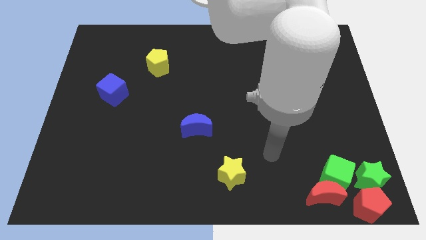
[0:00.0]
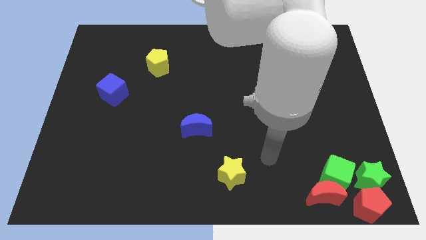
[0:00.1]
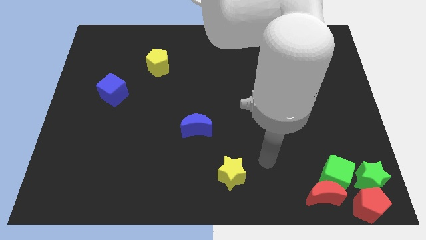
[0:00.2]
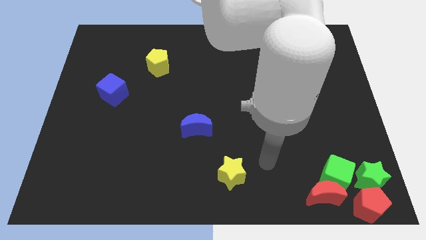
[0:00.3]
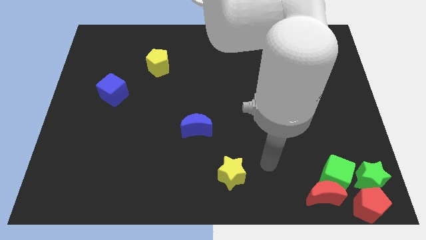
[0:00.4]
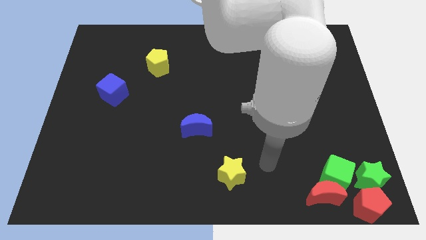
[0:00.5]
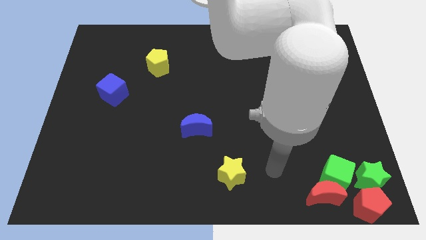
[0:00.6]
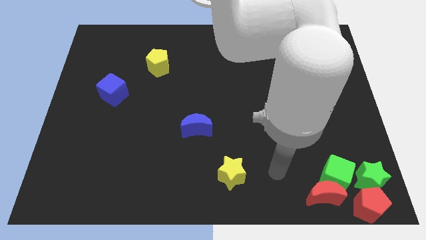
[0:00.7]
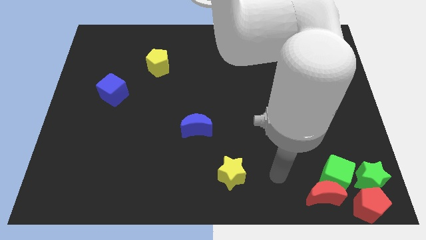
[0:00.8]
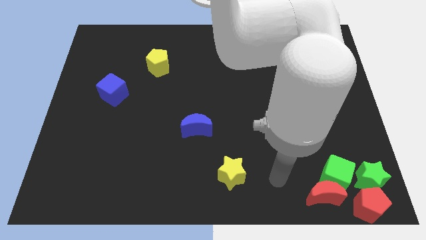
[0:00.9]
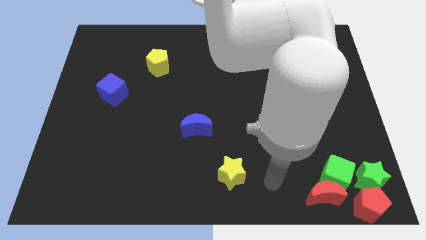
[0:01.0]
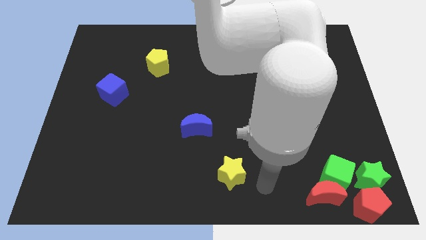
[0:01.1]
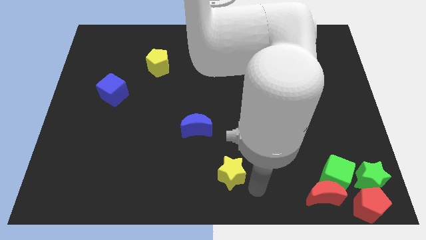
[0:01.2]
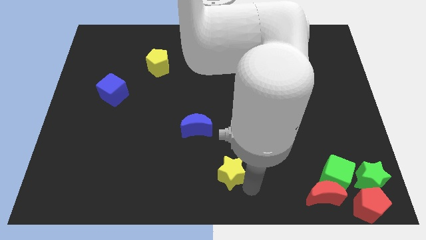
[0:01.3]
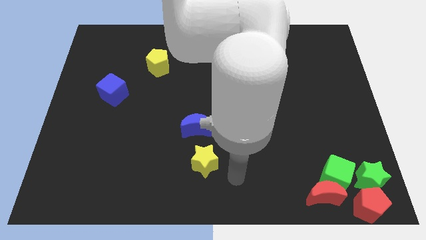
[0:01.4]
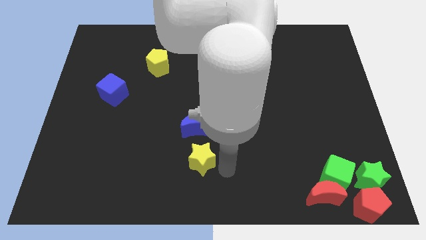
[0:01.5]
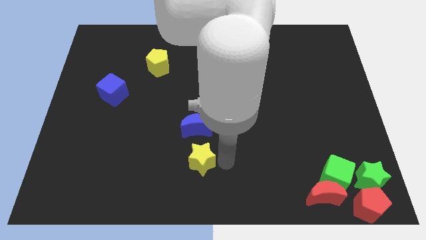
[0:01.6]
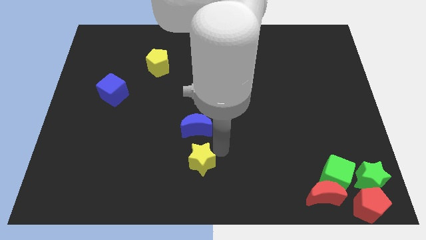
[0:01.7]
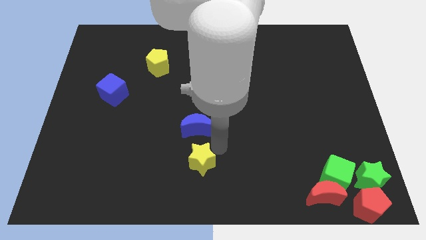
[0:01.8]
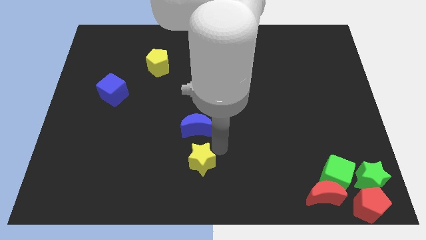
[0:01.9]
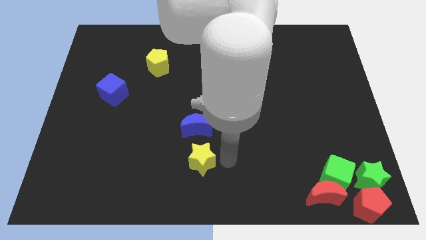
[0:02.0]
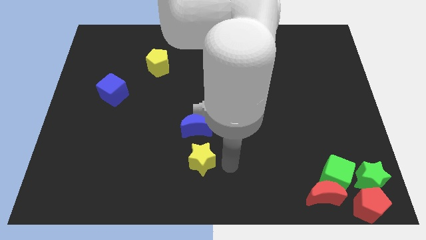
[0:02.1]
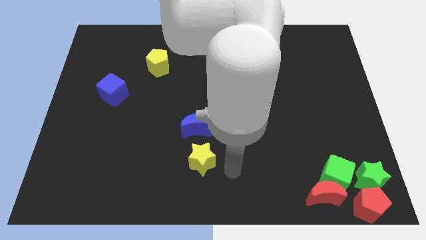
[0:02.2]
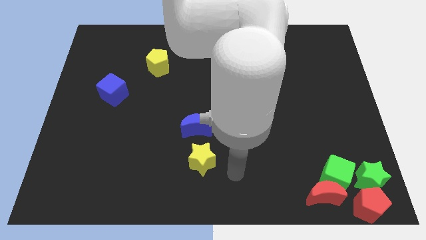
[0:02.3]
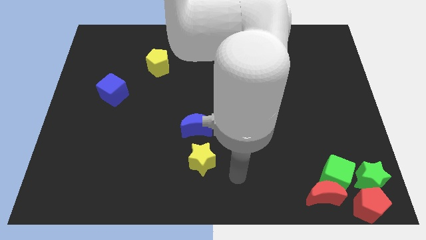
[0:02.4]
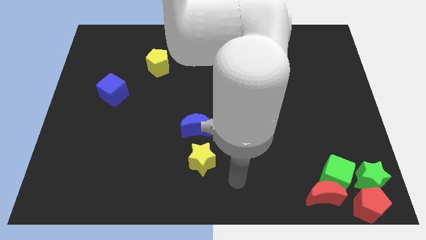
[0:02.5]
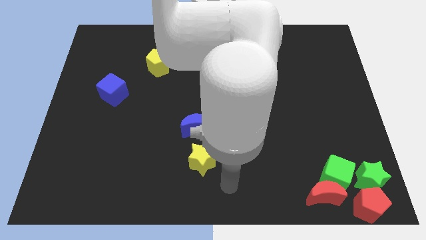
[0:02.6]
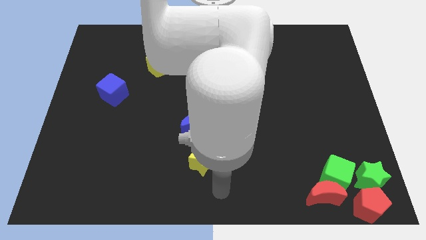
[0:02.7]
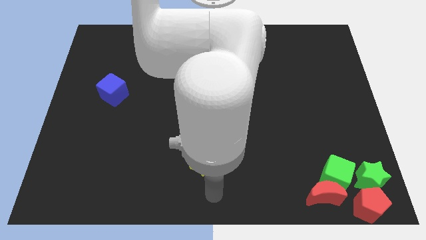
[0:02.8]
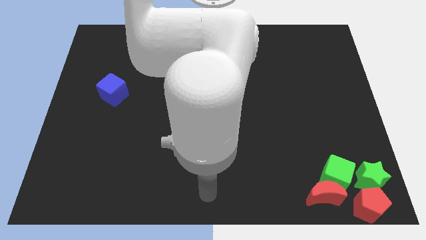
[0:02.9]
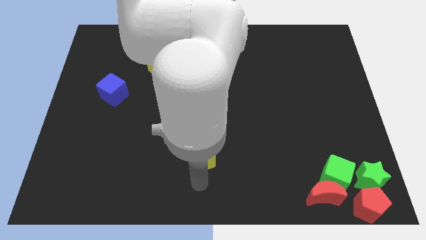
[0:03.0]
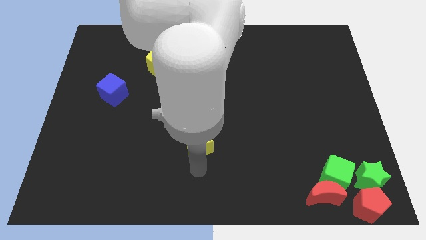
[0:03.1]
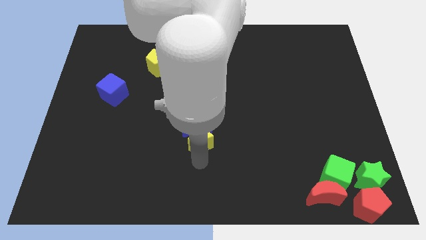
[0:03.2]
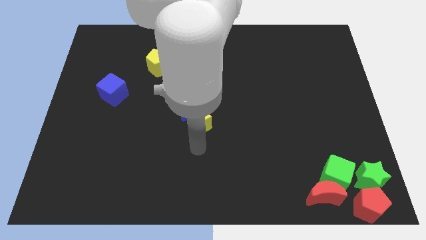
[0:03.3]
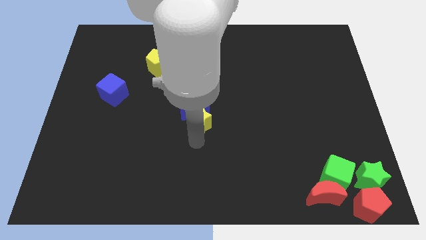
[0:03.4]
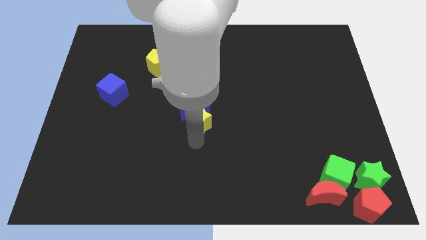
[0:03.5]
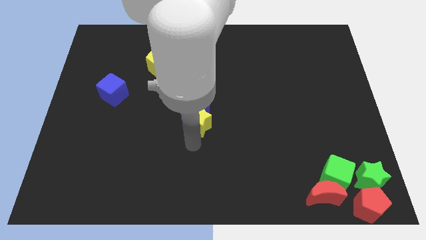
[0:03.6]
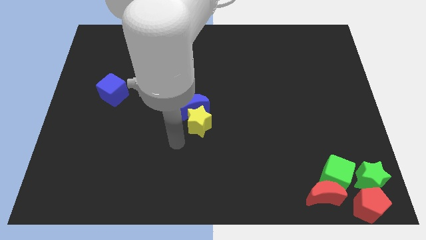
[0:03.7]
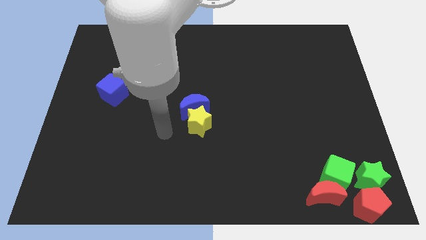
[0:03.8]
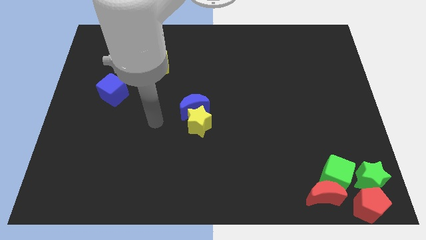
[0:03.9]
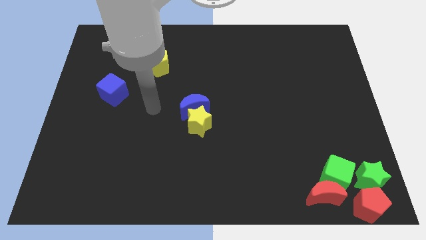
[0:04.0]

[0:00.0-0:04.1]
push yellow star into blue moon

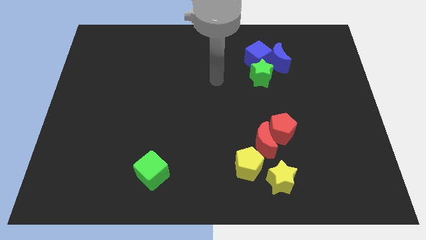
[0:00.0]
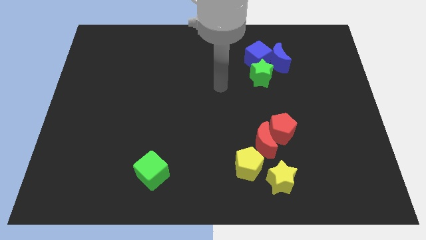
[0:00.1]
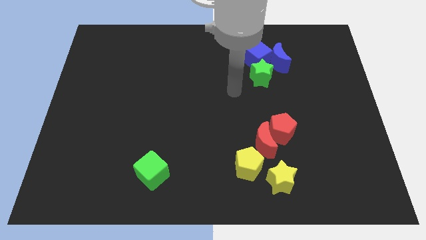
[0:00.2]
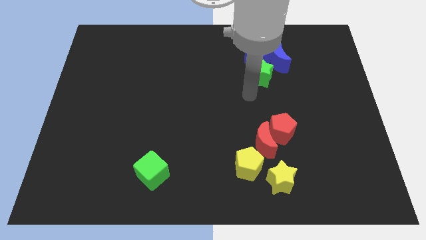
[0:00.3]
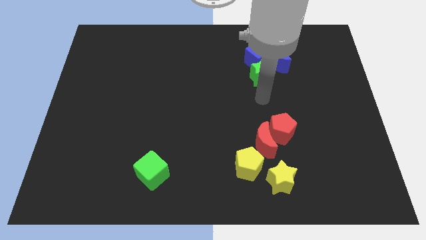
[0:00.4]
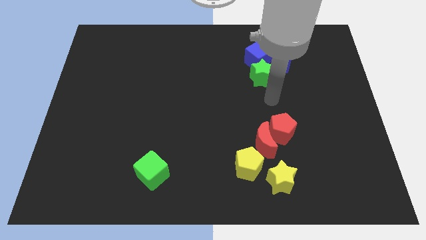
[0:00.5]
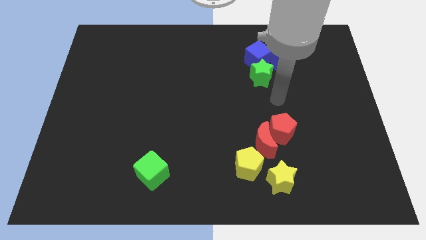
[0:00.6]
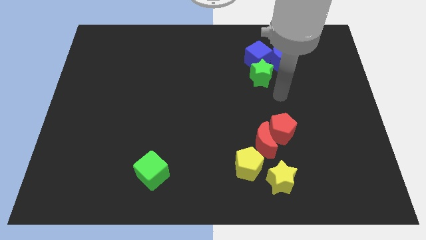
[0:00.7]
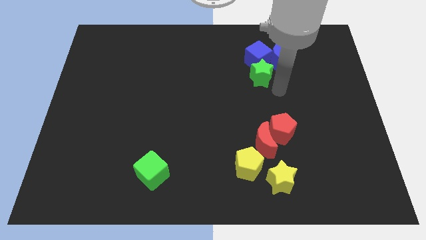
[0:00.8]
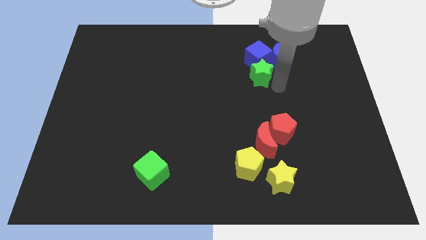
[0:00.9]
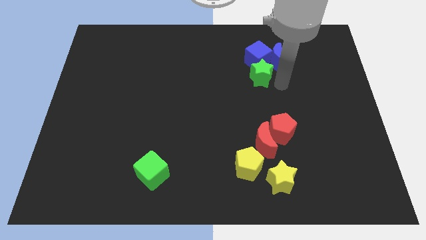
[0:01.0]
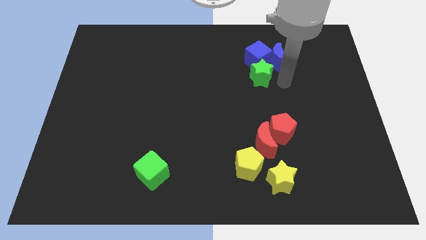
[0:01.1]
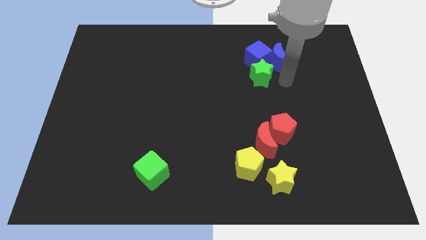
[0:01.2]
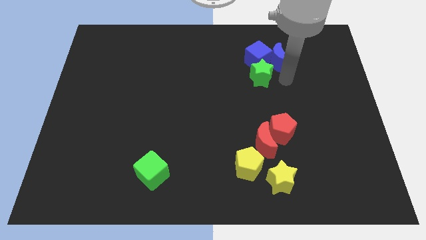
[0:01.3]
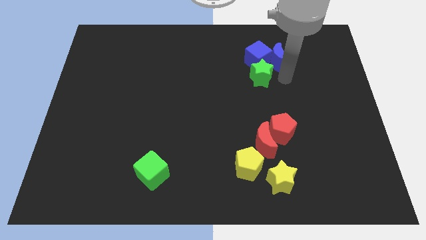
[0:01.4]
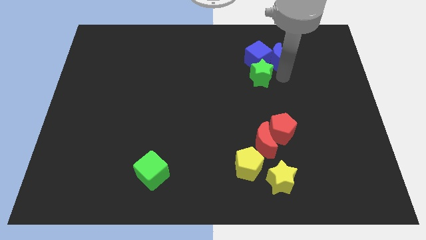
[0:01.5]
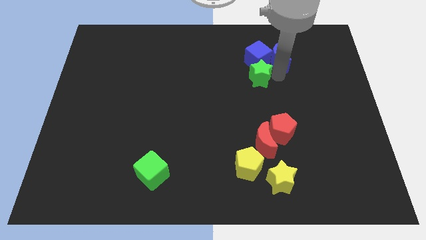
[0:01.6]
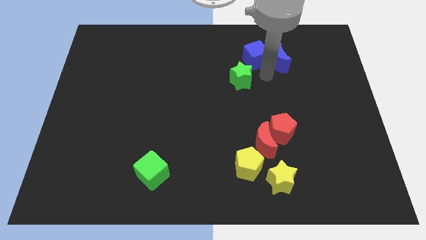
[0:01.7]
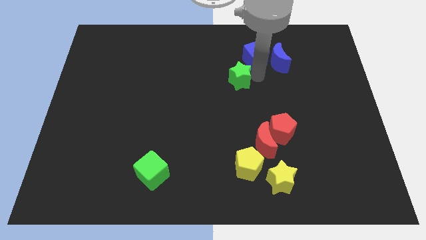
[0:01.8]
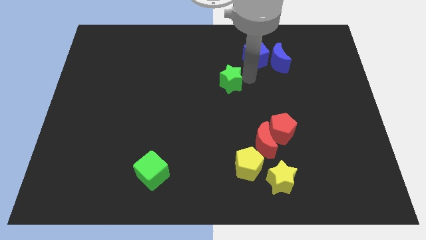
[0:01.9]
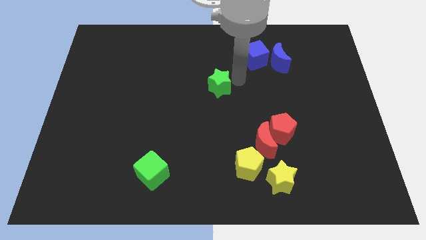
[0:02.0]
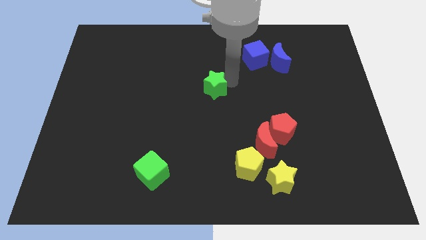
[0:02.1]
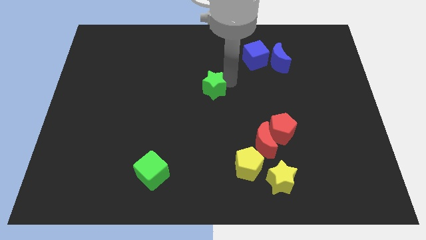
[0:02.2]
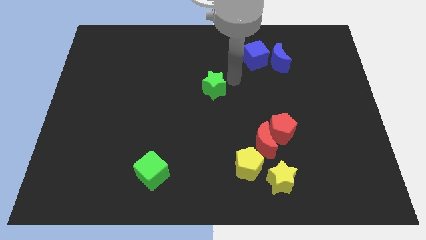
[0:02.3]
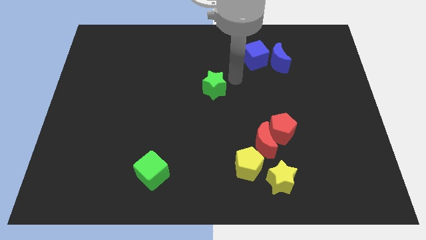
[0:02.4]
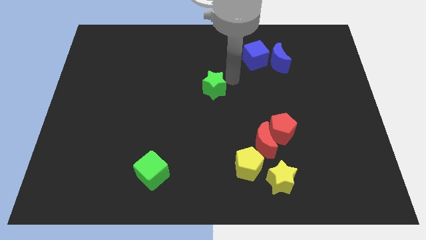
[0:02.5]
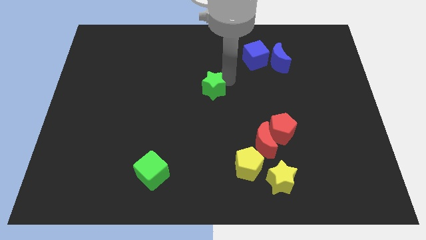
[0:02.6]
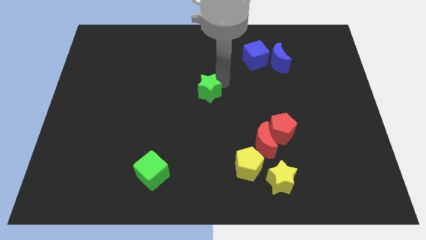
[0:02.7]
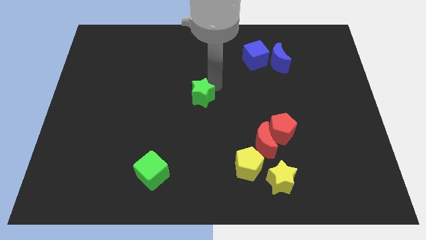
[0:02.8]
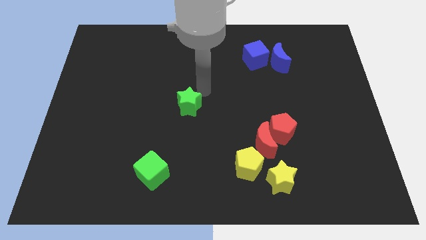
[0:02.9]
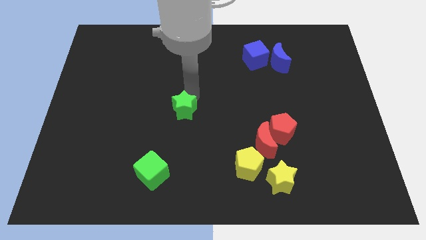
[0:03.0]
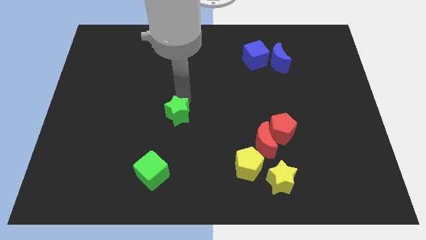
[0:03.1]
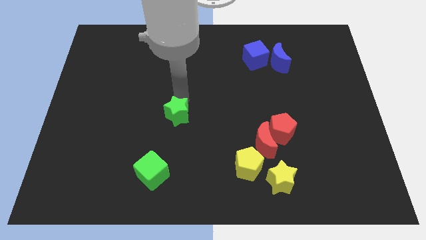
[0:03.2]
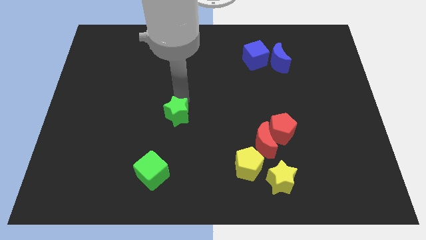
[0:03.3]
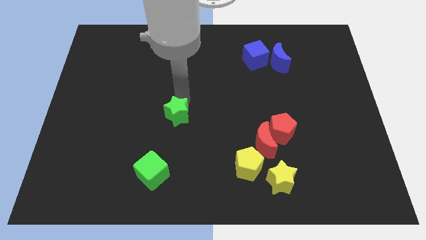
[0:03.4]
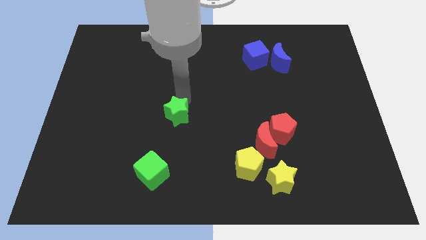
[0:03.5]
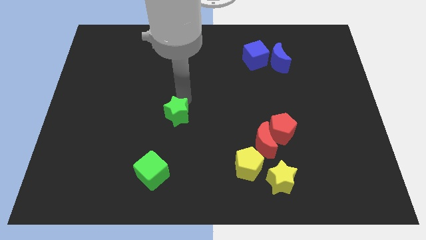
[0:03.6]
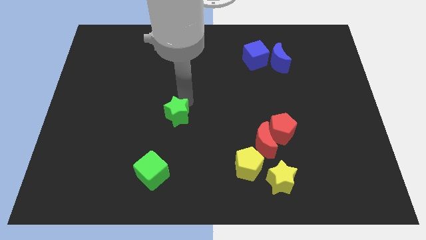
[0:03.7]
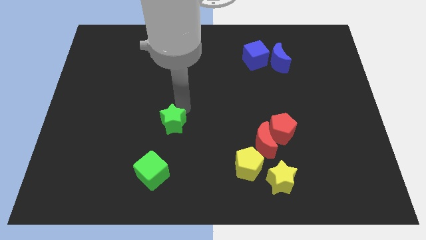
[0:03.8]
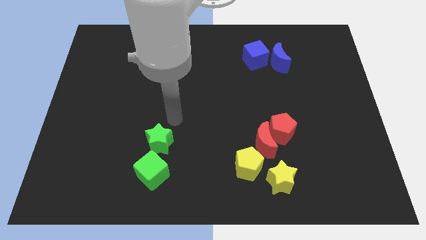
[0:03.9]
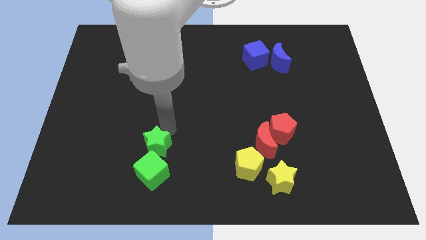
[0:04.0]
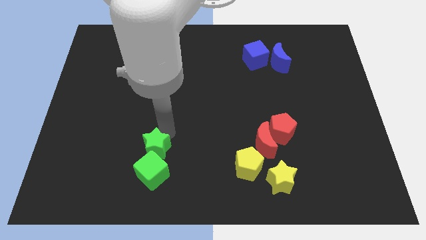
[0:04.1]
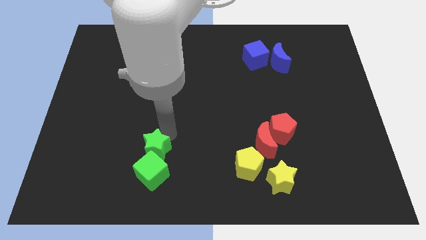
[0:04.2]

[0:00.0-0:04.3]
separate green star and blue cube

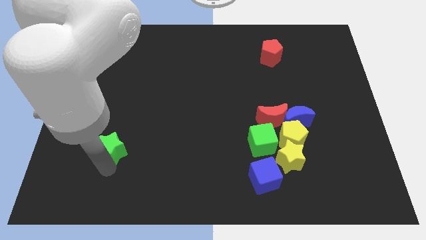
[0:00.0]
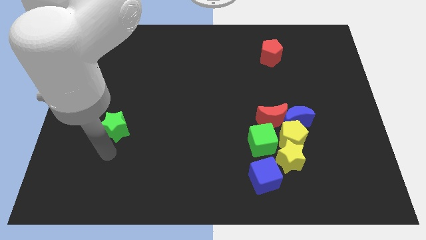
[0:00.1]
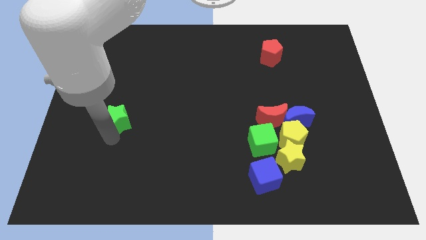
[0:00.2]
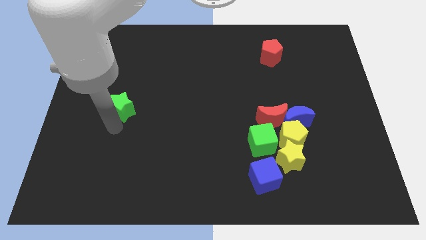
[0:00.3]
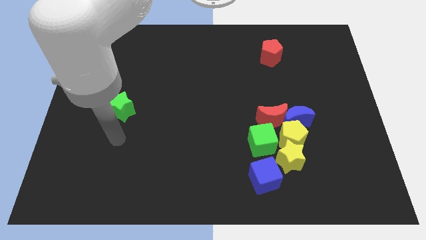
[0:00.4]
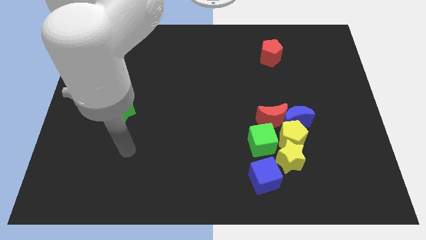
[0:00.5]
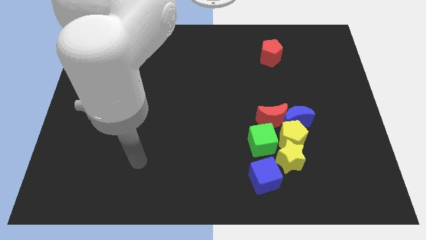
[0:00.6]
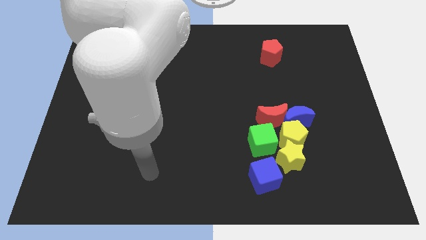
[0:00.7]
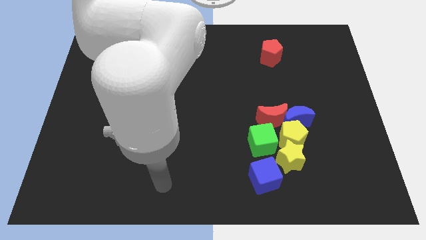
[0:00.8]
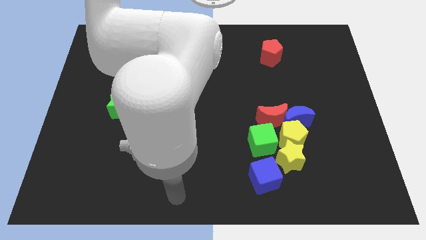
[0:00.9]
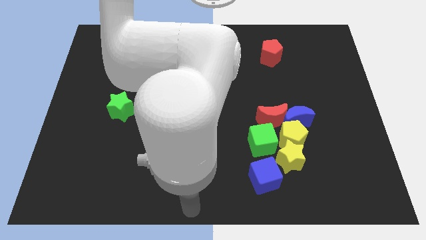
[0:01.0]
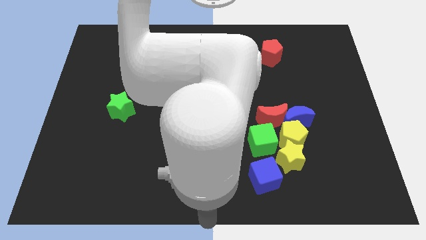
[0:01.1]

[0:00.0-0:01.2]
push the green star up slightly
